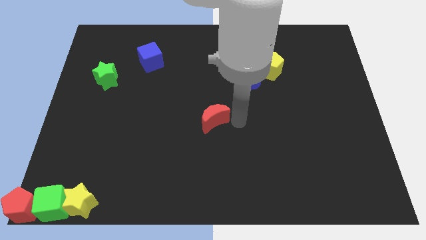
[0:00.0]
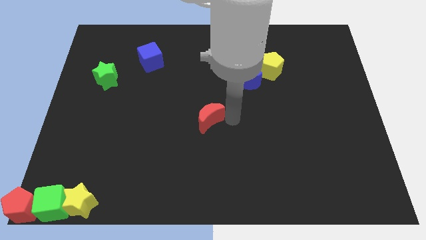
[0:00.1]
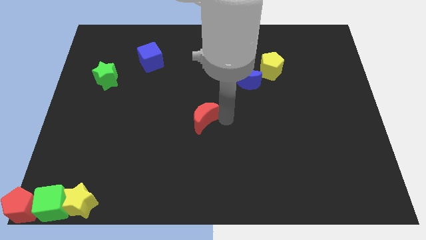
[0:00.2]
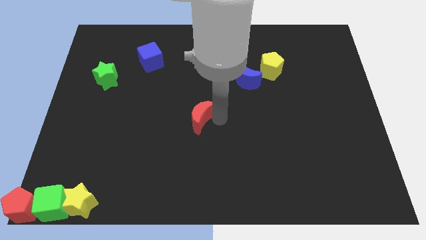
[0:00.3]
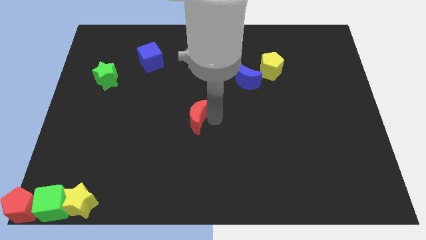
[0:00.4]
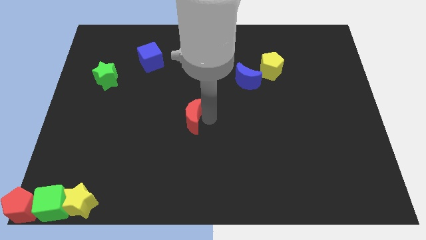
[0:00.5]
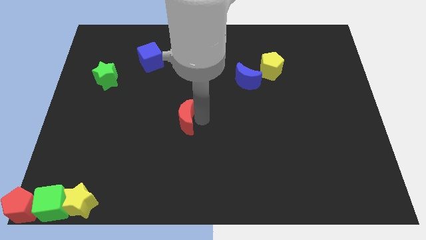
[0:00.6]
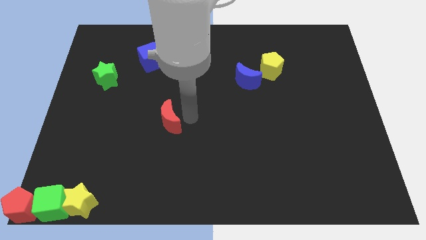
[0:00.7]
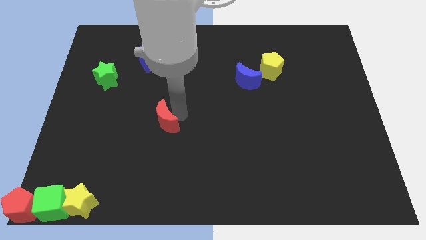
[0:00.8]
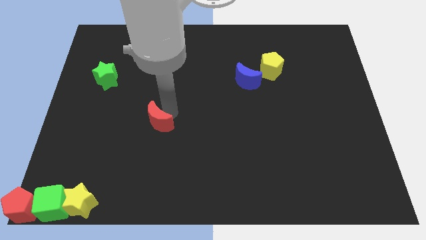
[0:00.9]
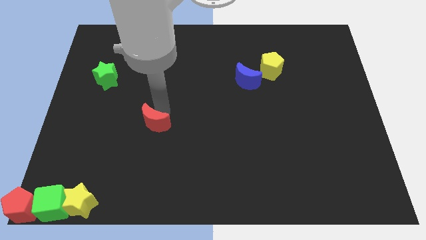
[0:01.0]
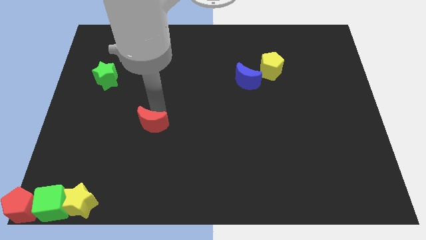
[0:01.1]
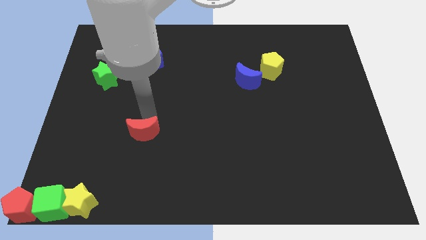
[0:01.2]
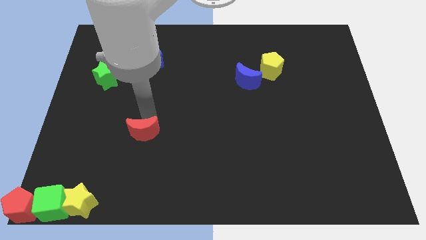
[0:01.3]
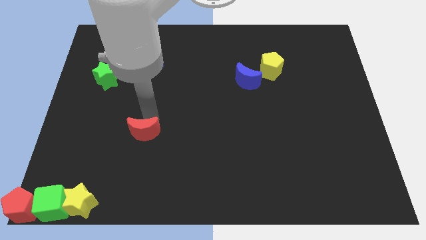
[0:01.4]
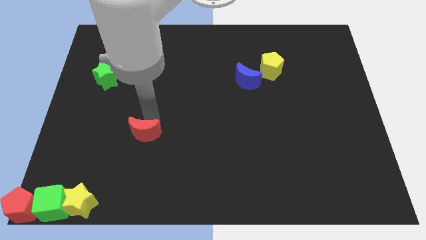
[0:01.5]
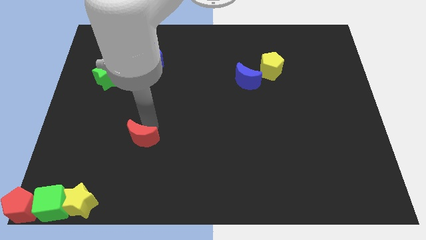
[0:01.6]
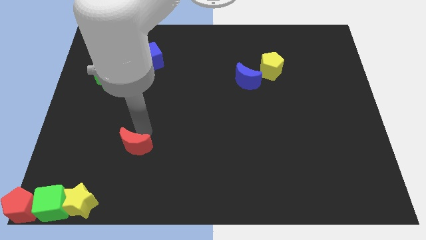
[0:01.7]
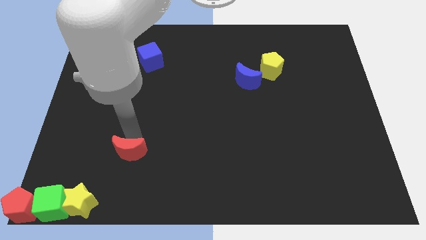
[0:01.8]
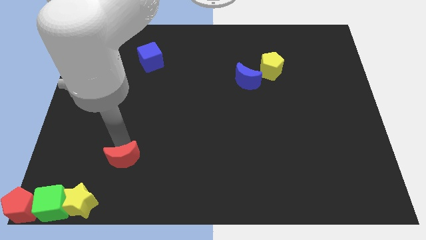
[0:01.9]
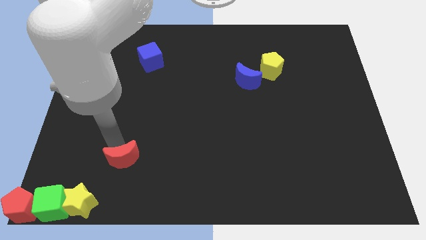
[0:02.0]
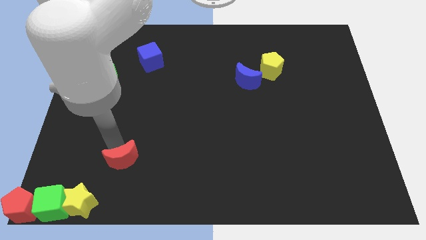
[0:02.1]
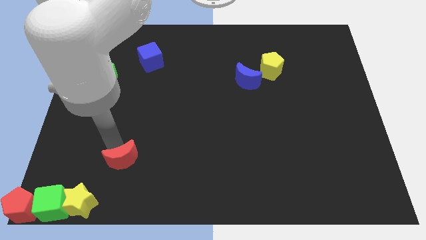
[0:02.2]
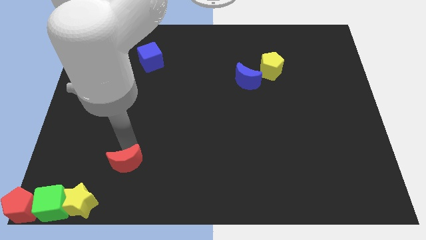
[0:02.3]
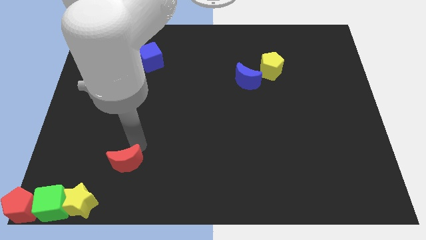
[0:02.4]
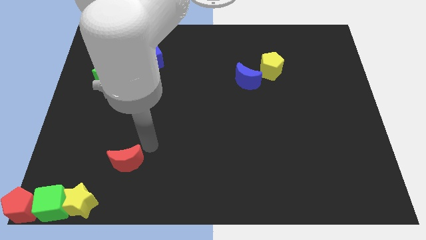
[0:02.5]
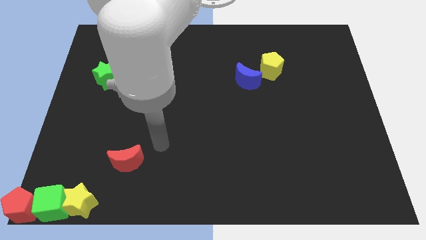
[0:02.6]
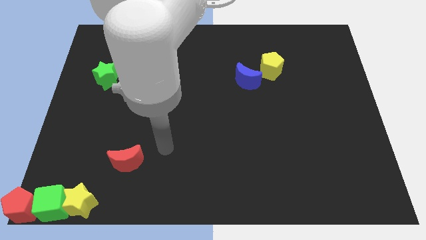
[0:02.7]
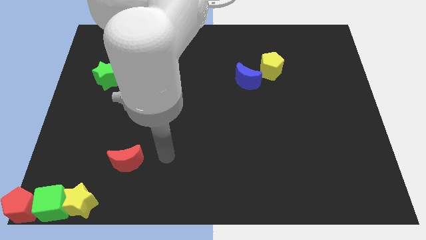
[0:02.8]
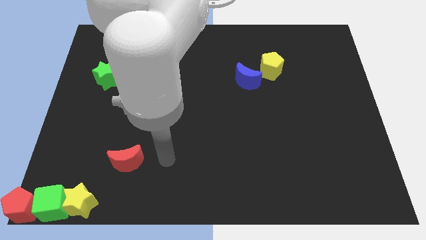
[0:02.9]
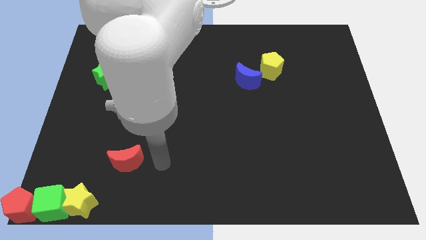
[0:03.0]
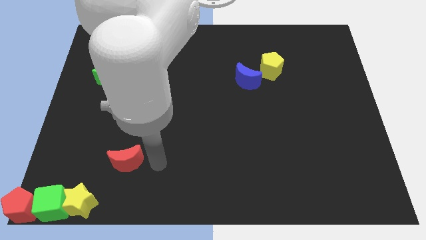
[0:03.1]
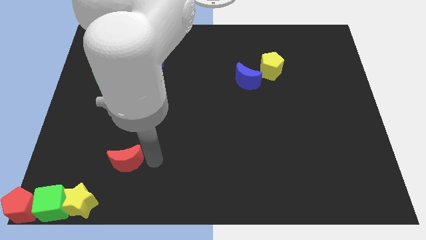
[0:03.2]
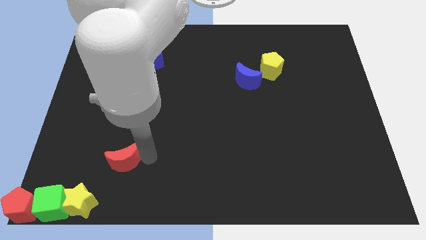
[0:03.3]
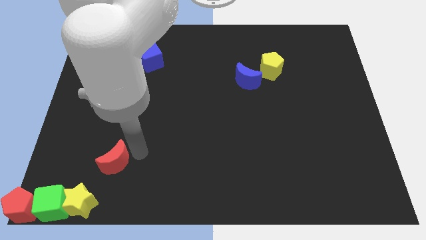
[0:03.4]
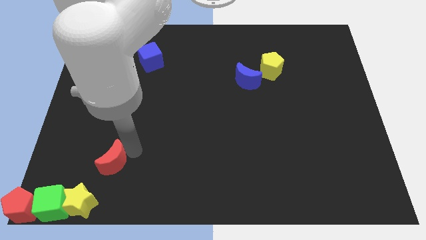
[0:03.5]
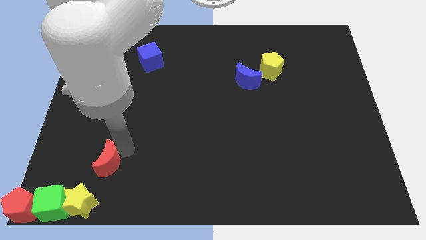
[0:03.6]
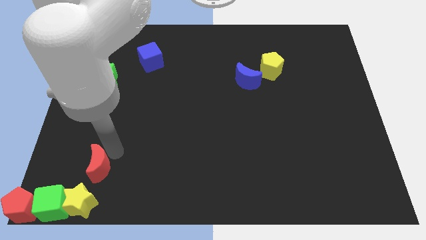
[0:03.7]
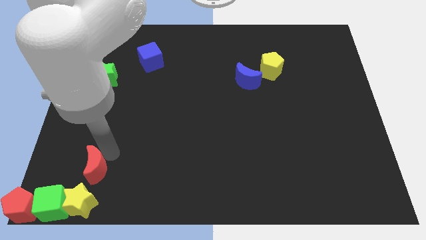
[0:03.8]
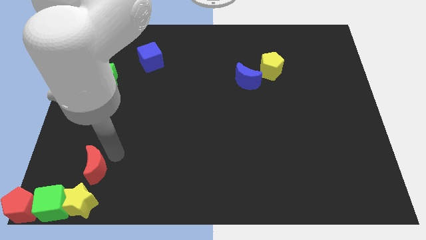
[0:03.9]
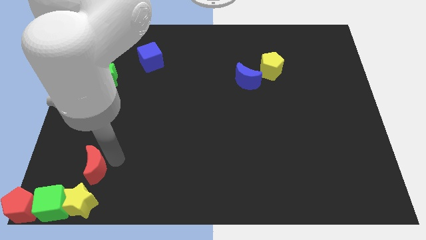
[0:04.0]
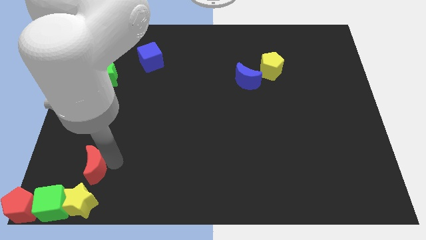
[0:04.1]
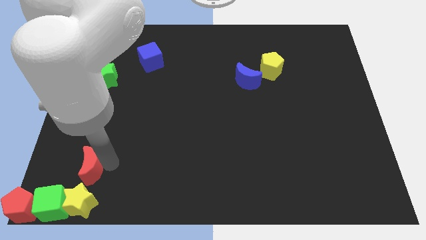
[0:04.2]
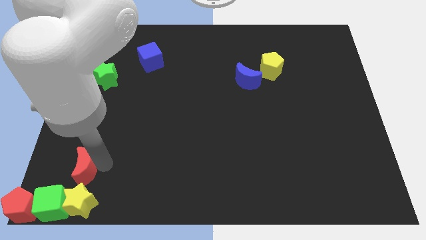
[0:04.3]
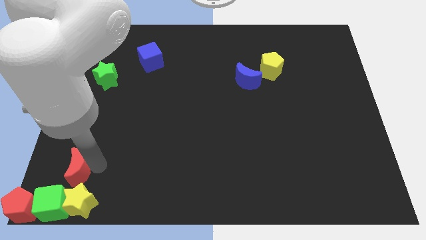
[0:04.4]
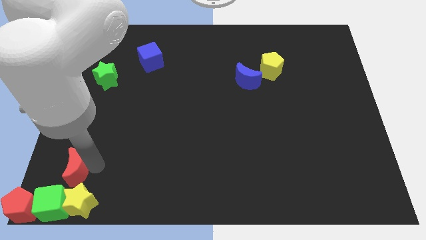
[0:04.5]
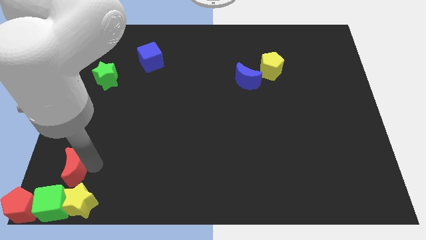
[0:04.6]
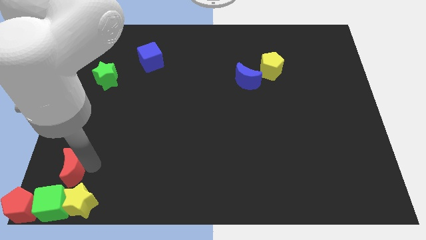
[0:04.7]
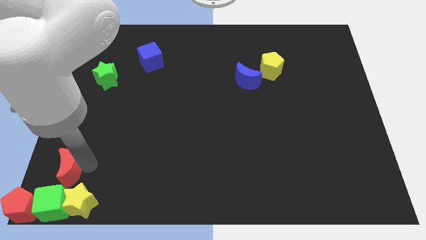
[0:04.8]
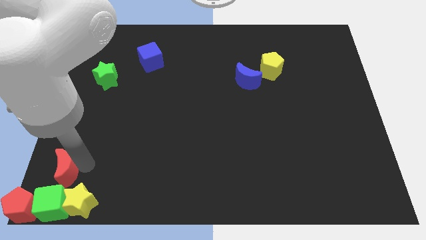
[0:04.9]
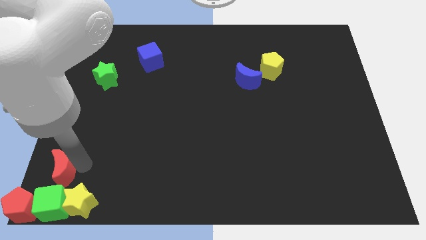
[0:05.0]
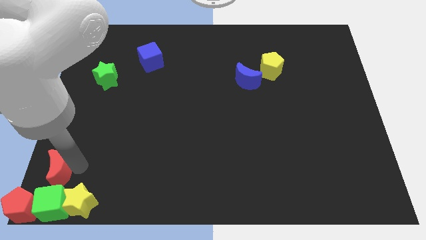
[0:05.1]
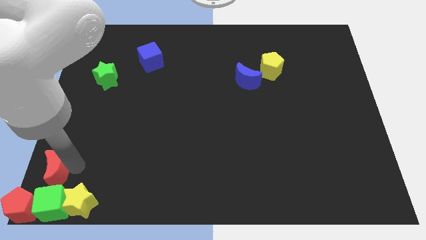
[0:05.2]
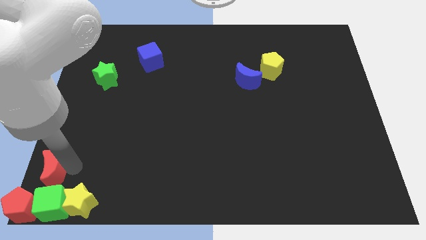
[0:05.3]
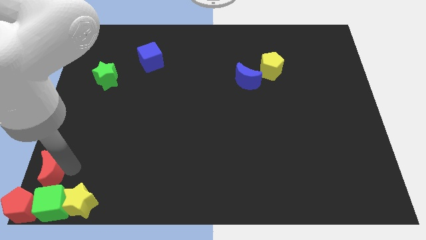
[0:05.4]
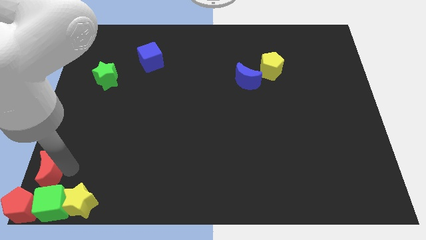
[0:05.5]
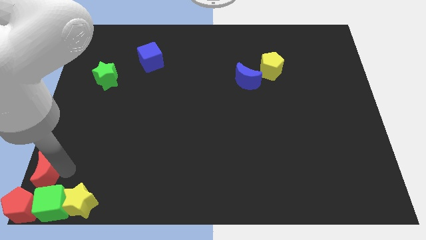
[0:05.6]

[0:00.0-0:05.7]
place the red moon at the top of the green cube

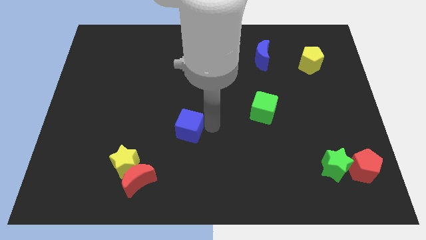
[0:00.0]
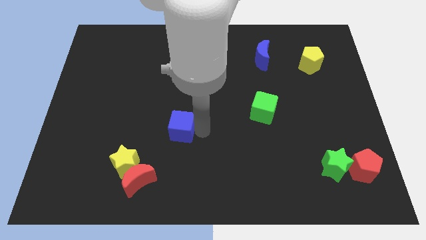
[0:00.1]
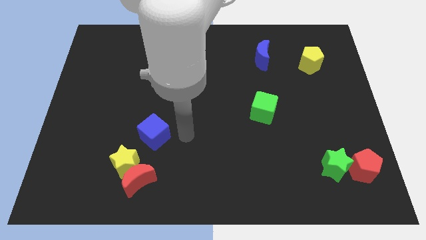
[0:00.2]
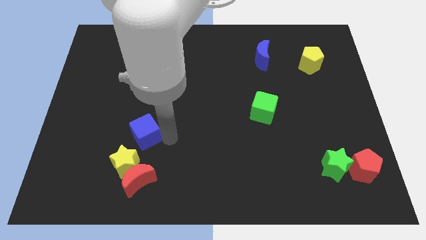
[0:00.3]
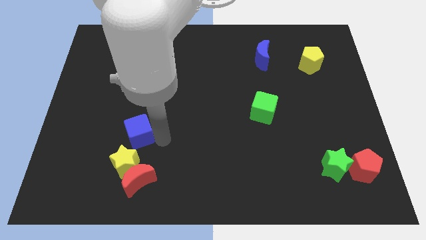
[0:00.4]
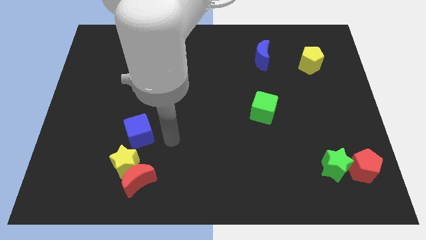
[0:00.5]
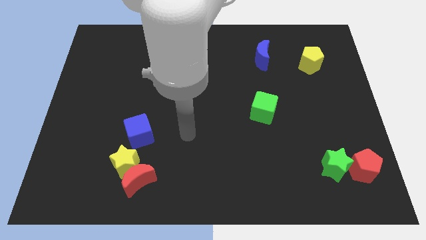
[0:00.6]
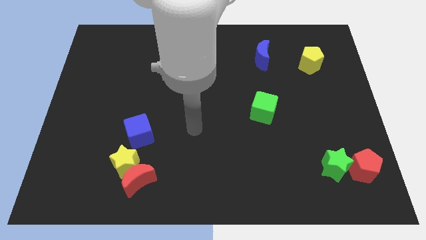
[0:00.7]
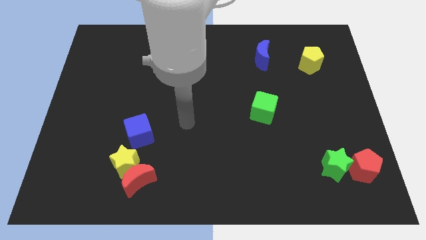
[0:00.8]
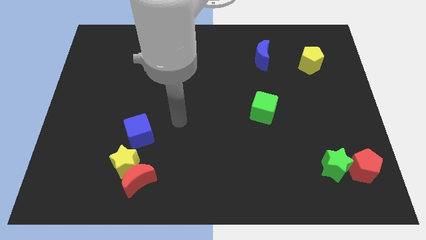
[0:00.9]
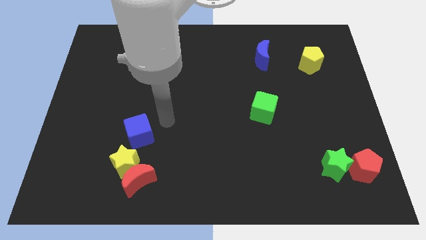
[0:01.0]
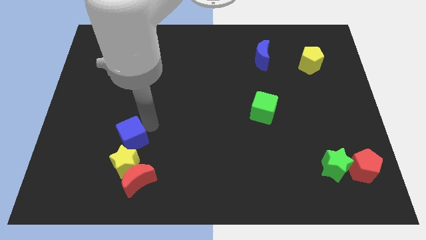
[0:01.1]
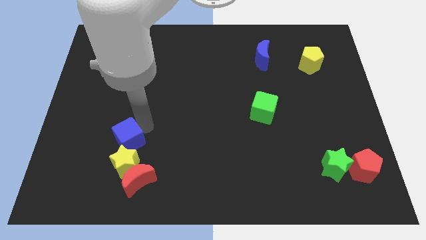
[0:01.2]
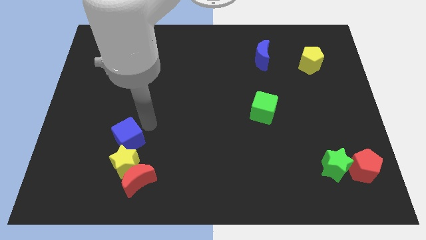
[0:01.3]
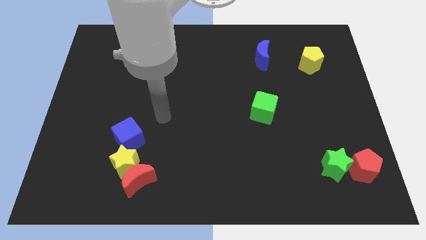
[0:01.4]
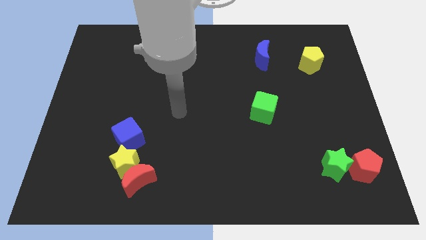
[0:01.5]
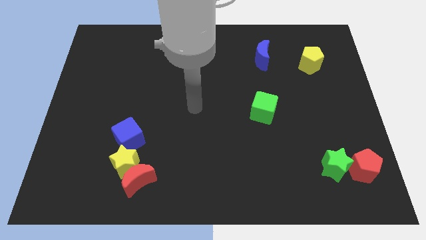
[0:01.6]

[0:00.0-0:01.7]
push the blue cube on the top of yellow star

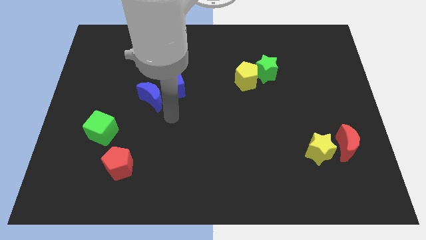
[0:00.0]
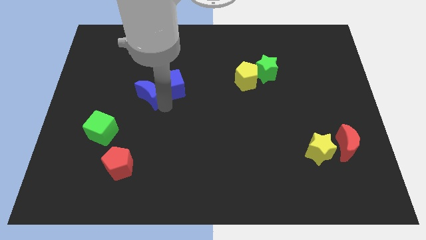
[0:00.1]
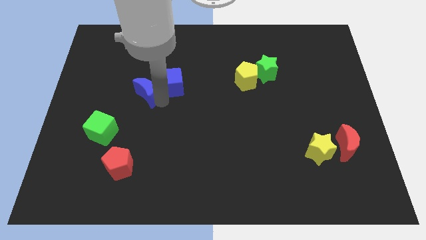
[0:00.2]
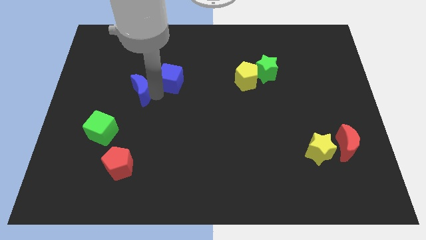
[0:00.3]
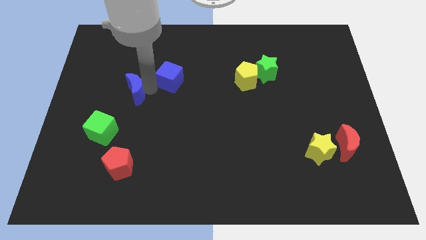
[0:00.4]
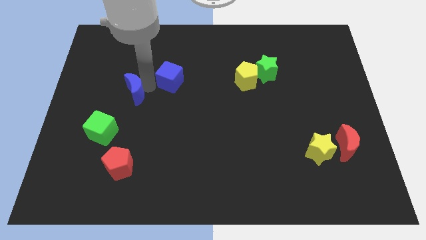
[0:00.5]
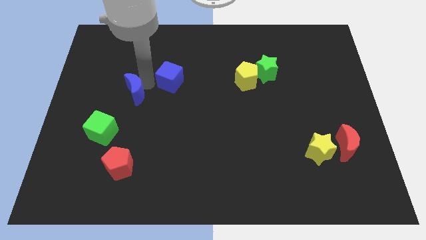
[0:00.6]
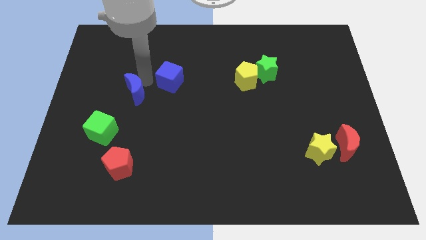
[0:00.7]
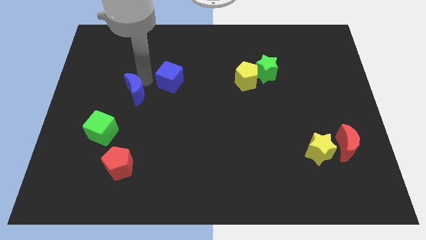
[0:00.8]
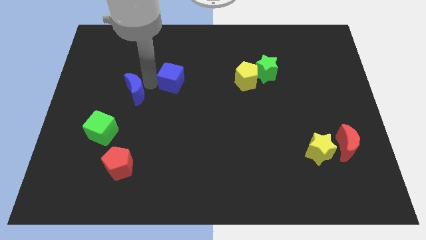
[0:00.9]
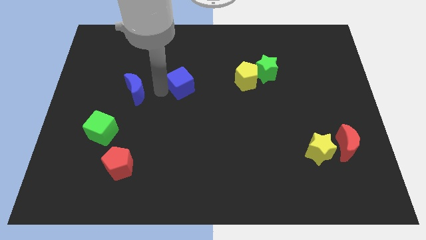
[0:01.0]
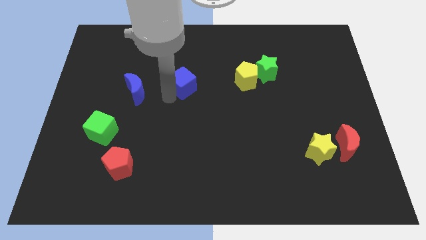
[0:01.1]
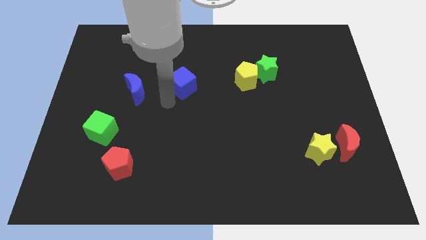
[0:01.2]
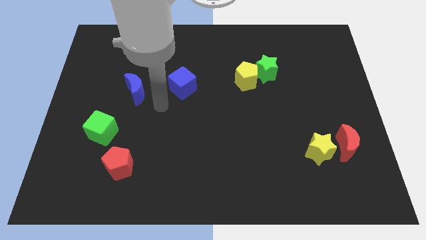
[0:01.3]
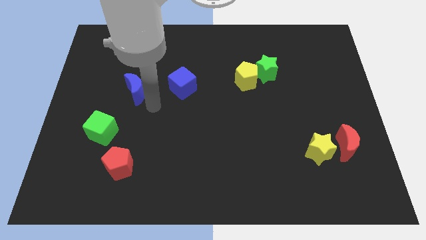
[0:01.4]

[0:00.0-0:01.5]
move blue moon from blue cube
